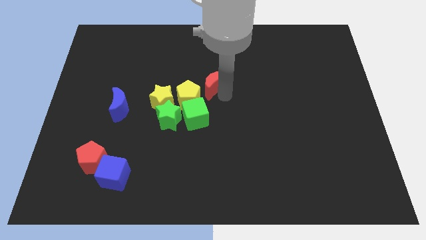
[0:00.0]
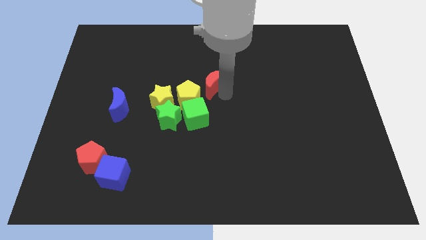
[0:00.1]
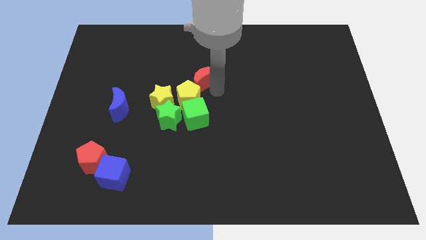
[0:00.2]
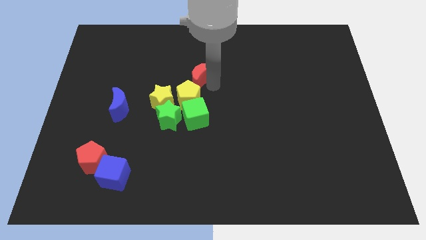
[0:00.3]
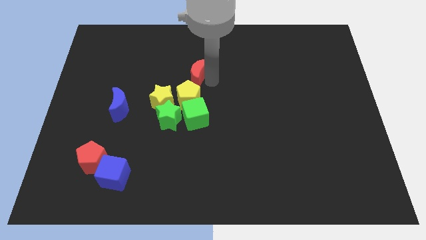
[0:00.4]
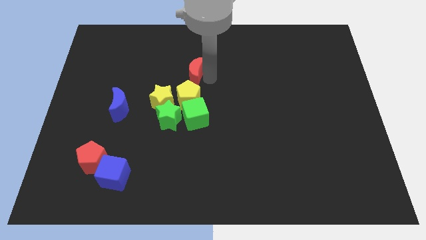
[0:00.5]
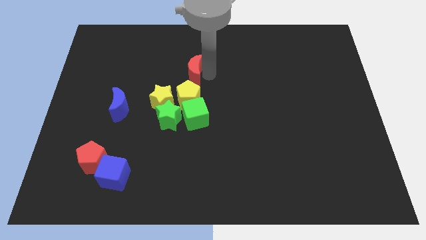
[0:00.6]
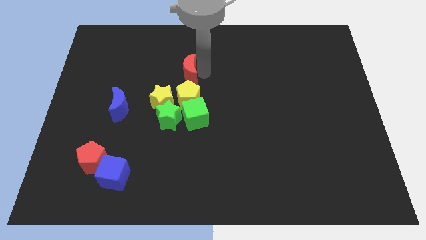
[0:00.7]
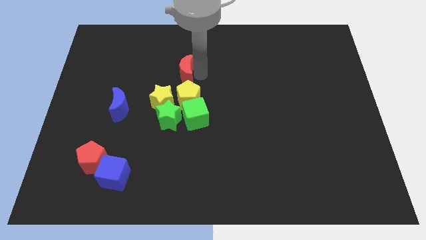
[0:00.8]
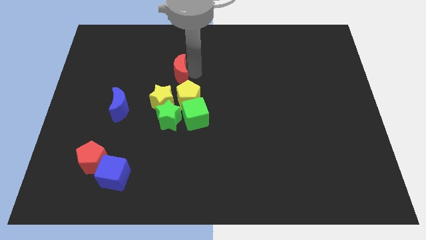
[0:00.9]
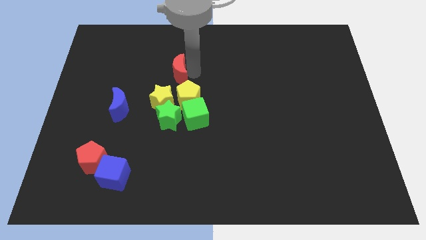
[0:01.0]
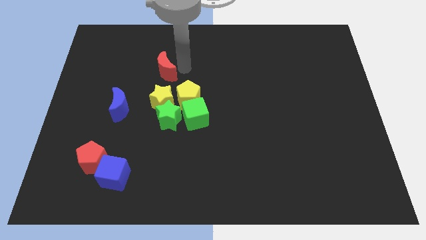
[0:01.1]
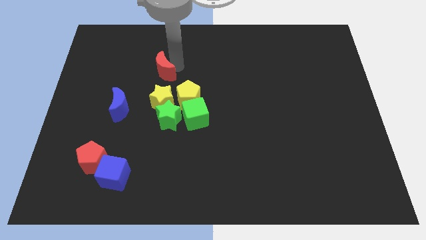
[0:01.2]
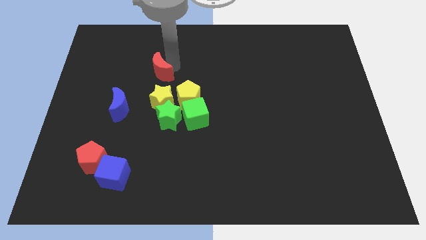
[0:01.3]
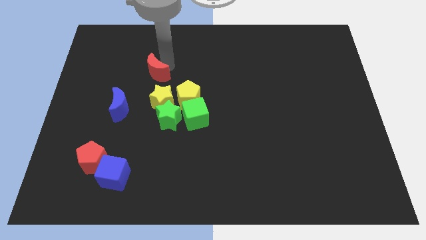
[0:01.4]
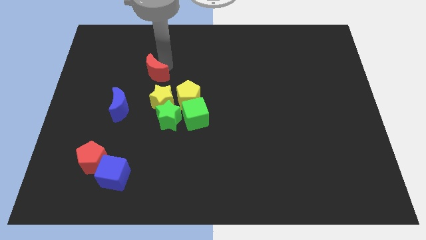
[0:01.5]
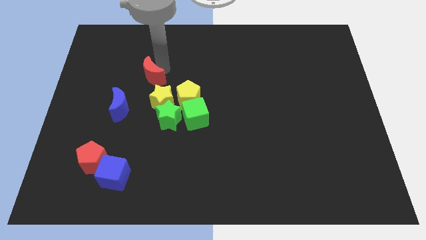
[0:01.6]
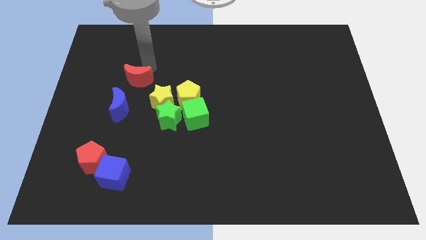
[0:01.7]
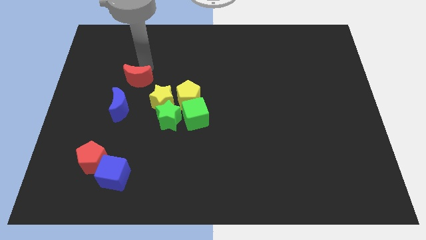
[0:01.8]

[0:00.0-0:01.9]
move the red crescent to the top left

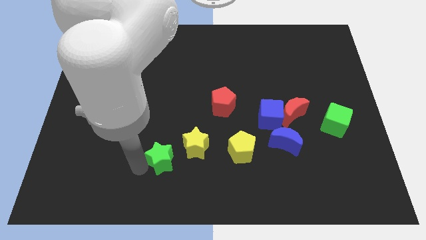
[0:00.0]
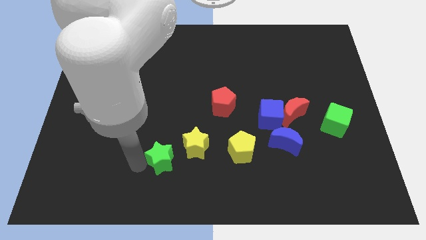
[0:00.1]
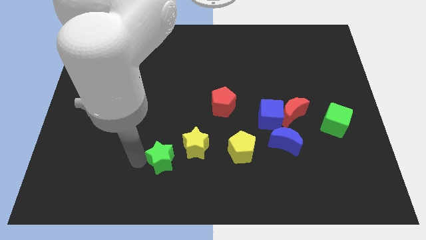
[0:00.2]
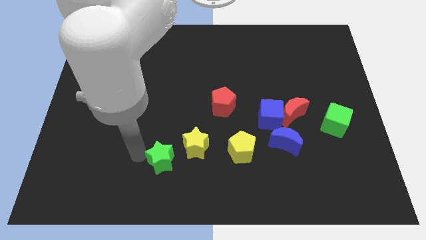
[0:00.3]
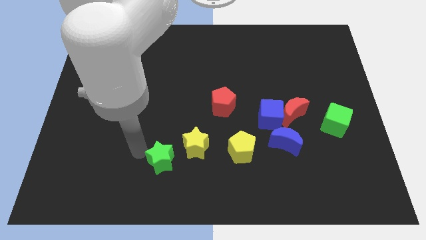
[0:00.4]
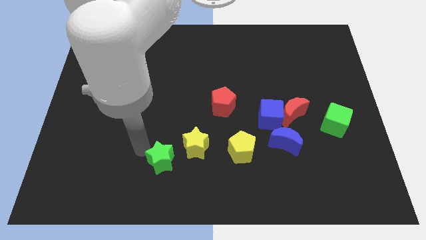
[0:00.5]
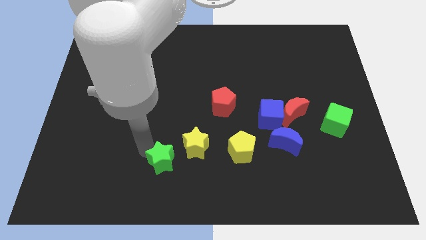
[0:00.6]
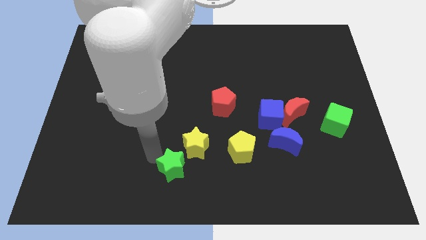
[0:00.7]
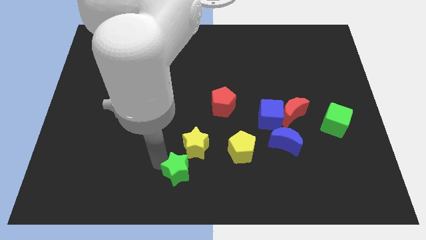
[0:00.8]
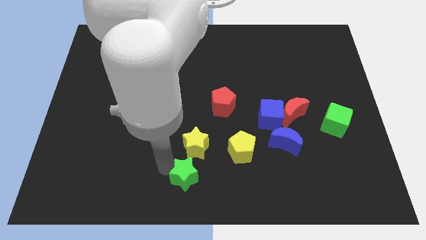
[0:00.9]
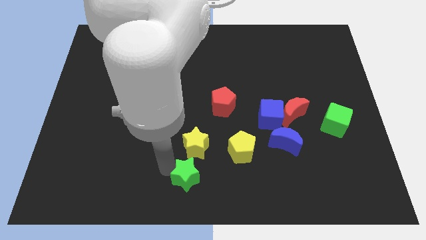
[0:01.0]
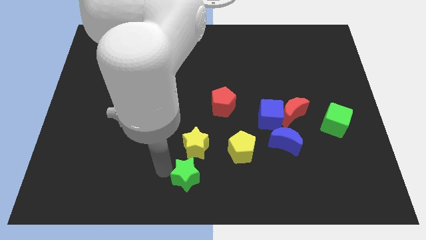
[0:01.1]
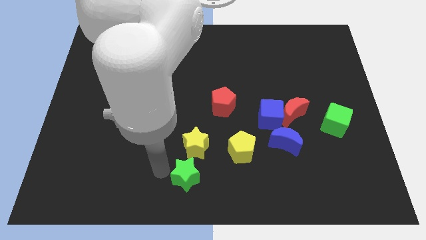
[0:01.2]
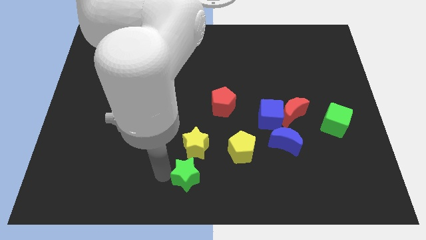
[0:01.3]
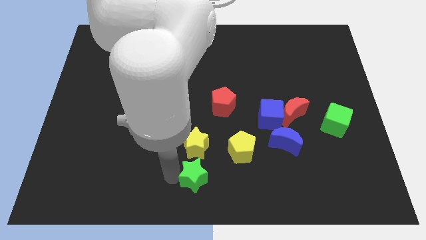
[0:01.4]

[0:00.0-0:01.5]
move the green star to the bottom of the yellow star

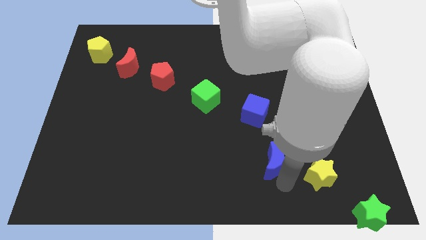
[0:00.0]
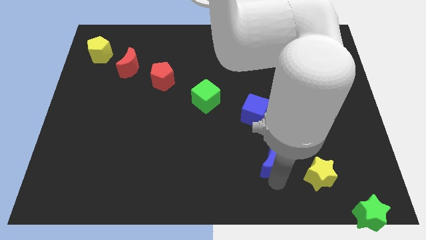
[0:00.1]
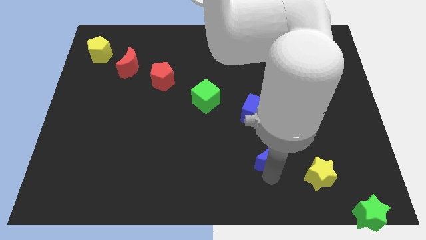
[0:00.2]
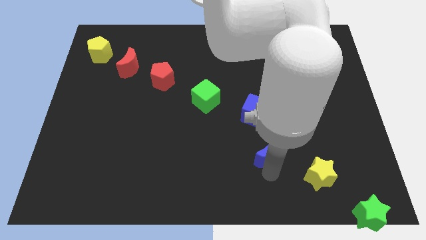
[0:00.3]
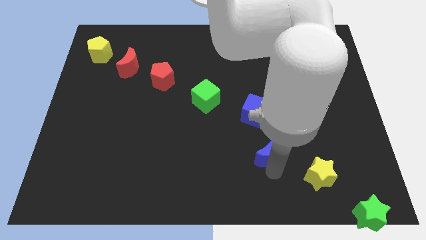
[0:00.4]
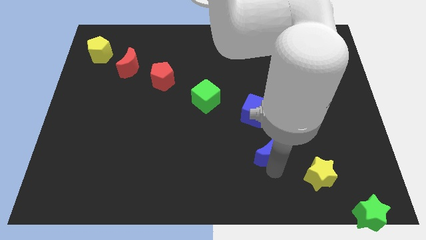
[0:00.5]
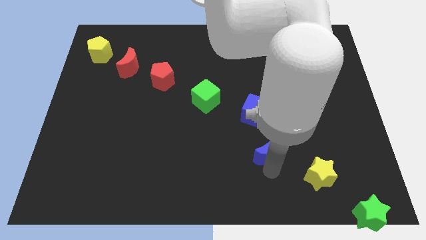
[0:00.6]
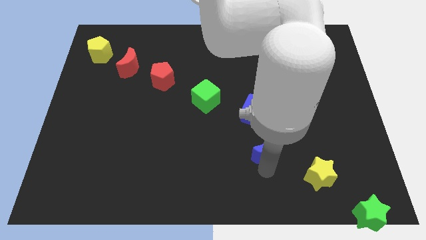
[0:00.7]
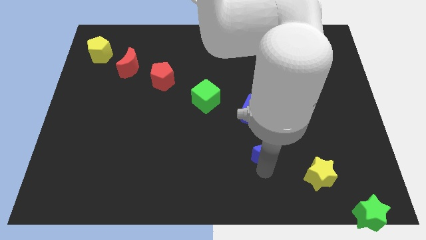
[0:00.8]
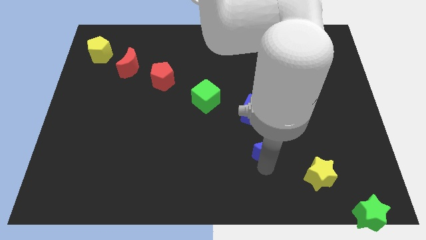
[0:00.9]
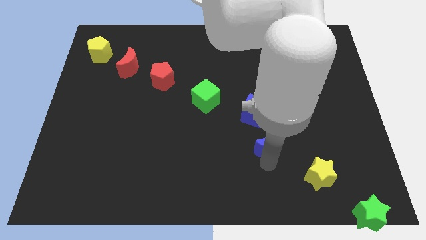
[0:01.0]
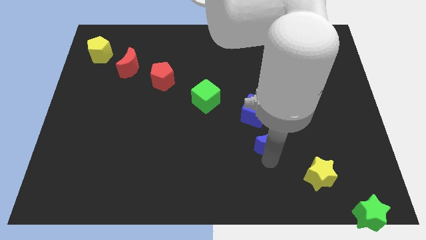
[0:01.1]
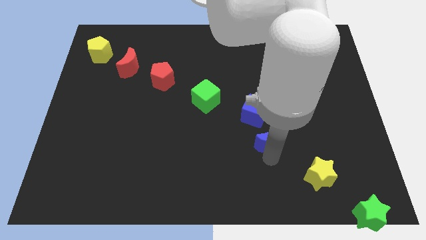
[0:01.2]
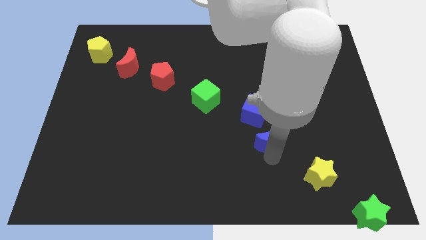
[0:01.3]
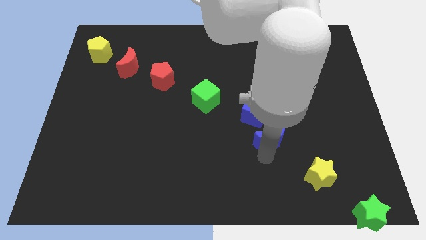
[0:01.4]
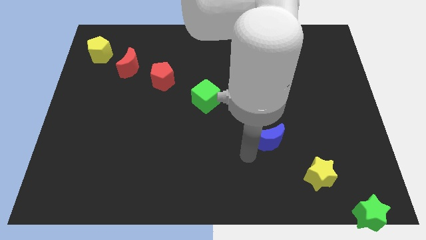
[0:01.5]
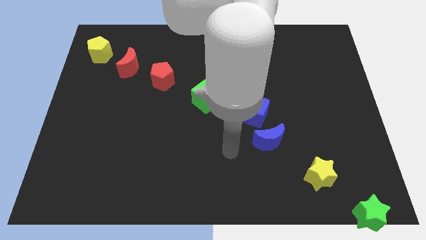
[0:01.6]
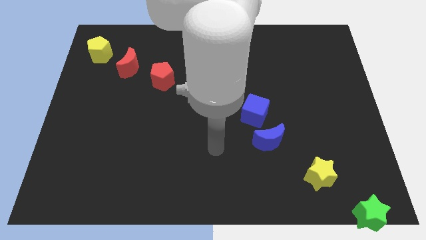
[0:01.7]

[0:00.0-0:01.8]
place blue moon to the bottom of blue cube

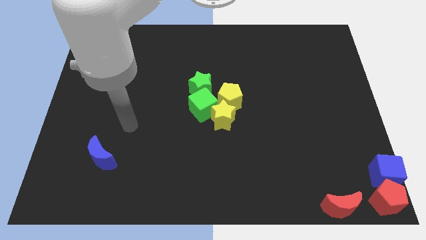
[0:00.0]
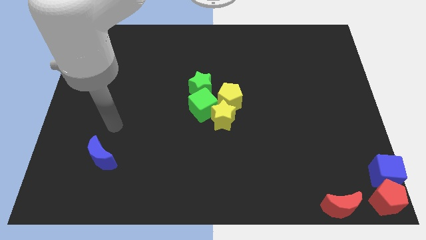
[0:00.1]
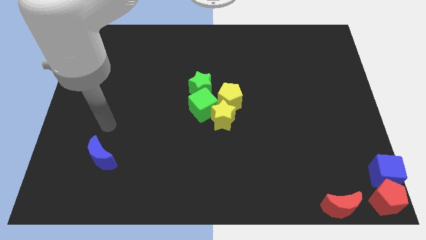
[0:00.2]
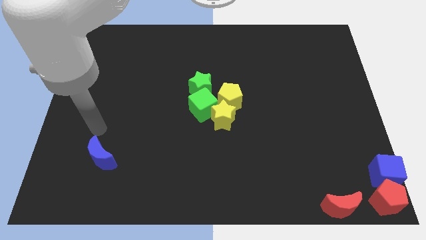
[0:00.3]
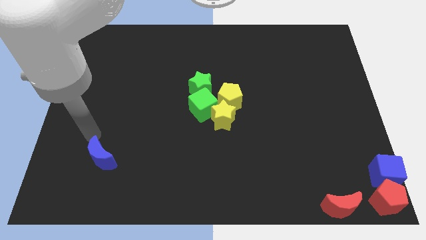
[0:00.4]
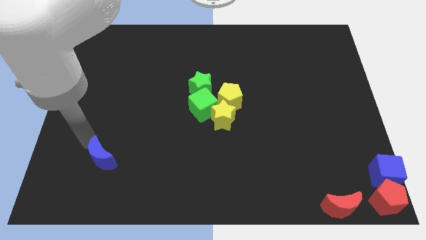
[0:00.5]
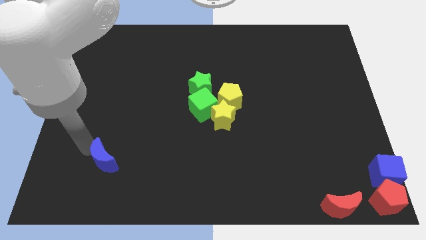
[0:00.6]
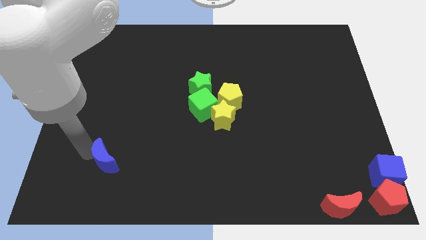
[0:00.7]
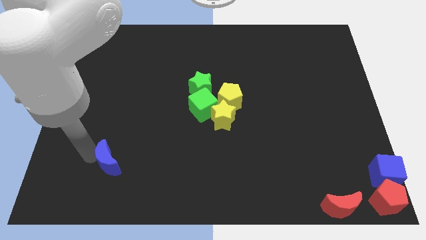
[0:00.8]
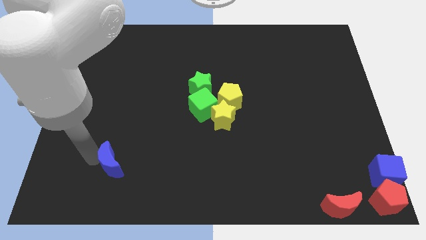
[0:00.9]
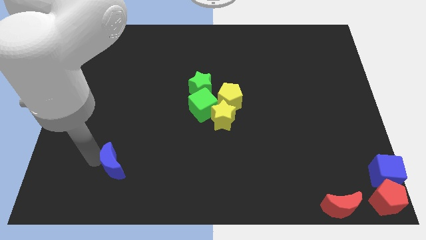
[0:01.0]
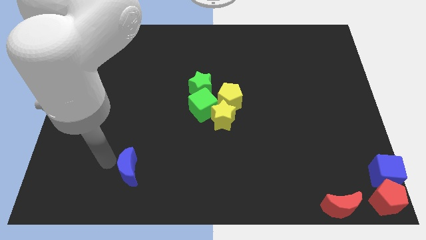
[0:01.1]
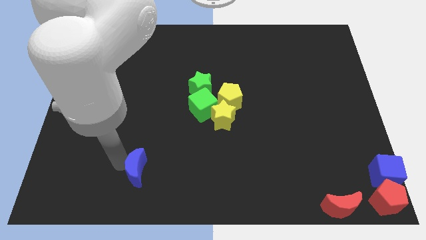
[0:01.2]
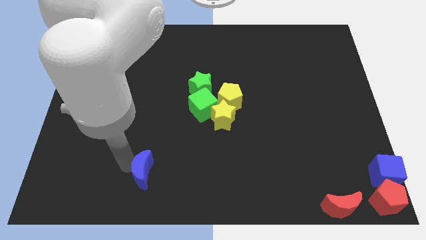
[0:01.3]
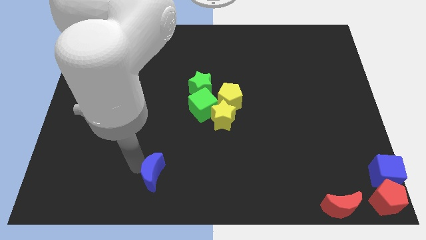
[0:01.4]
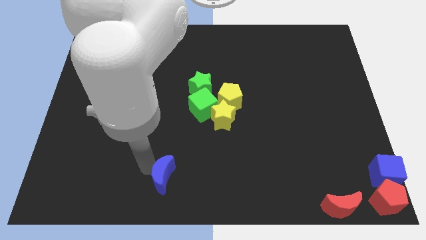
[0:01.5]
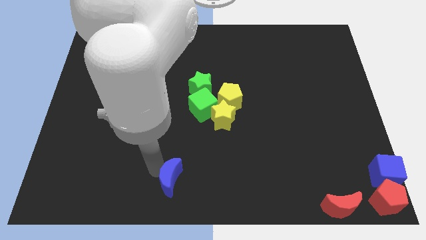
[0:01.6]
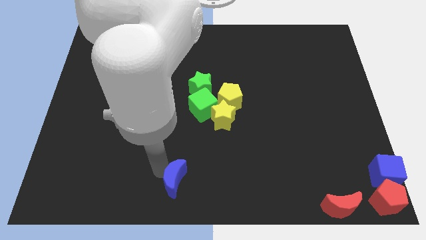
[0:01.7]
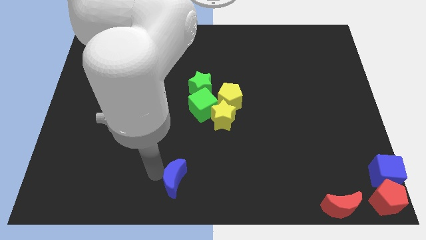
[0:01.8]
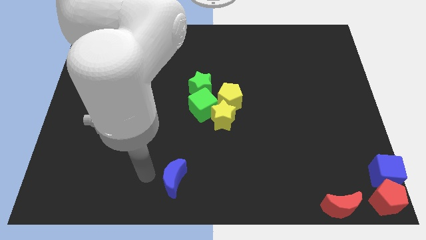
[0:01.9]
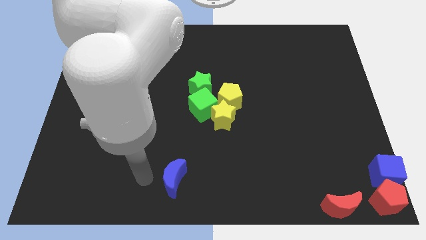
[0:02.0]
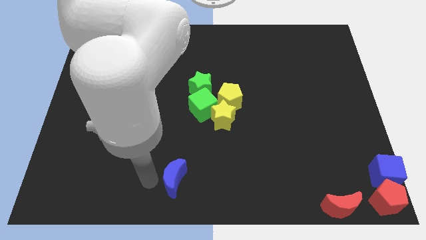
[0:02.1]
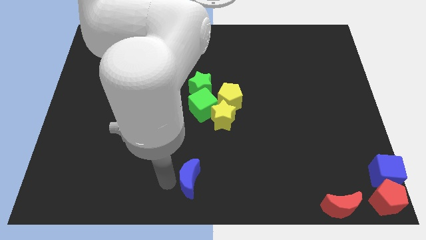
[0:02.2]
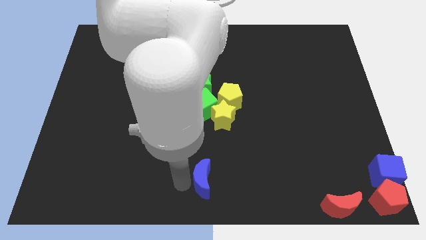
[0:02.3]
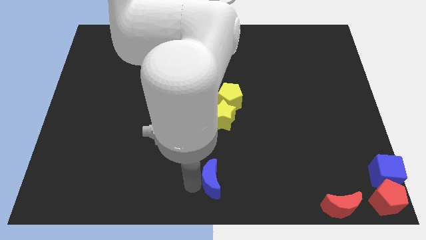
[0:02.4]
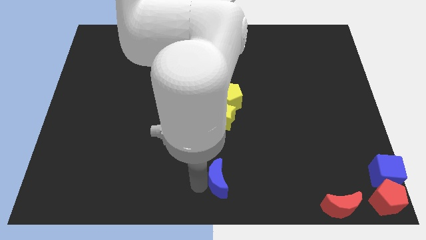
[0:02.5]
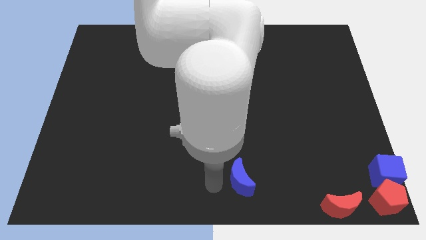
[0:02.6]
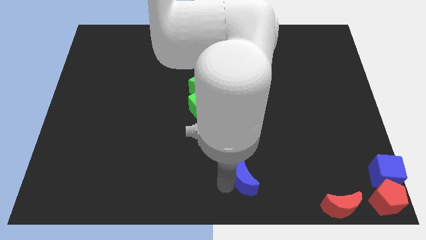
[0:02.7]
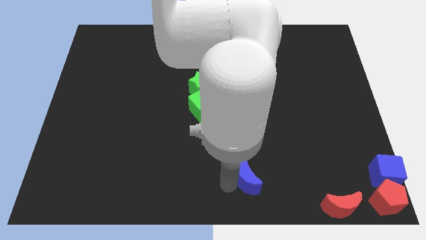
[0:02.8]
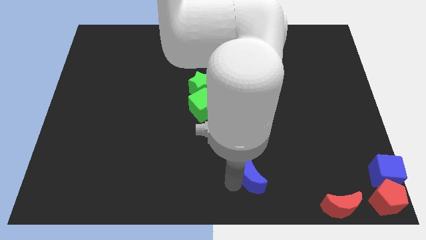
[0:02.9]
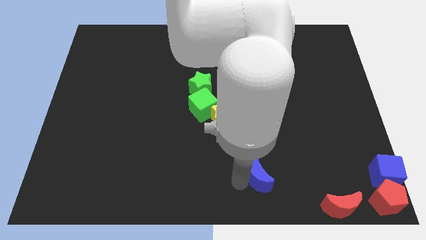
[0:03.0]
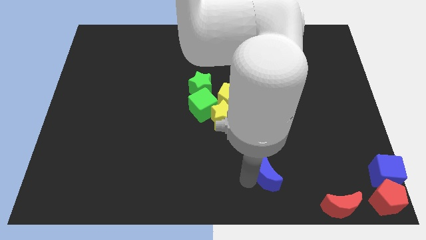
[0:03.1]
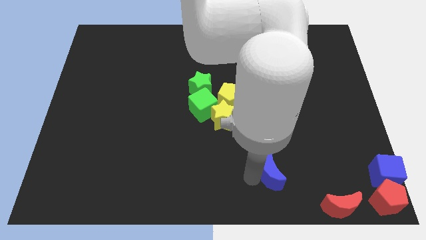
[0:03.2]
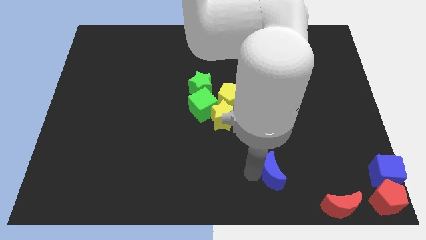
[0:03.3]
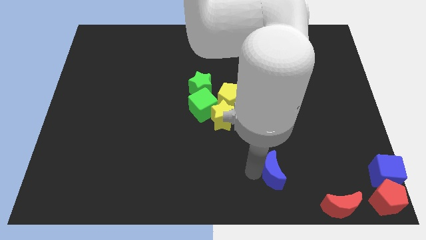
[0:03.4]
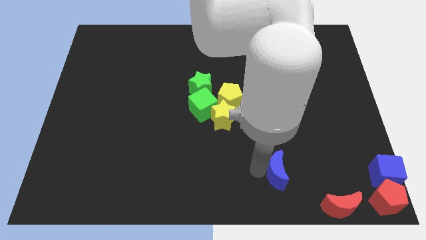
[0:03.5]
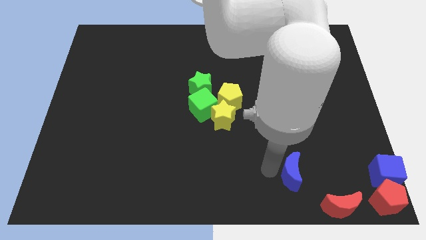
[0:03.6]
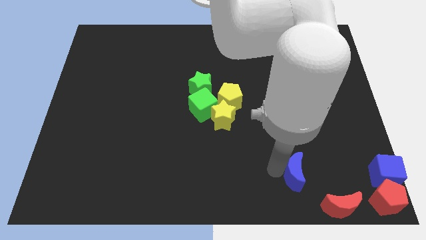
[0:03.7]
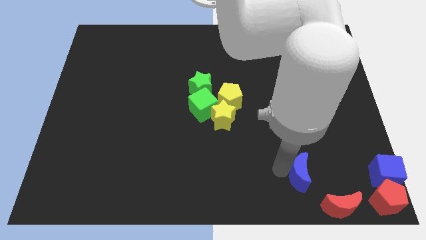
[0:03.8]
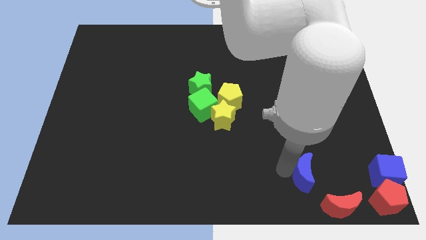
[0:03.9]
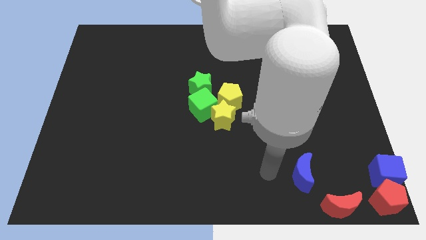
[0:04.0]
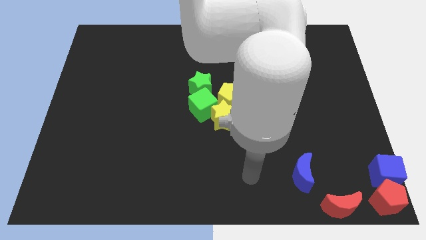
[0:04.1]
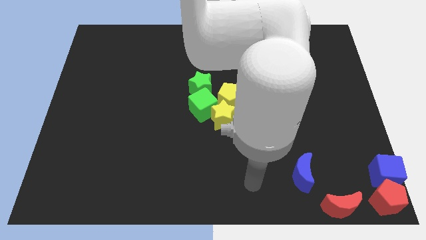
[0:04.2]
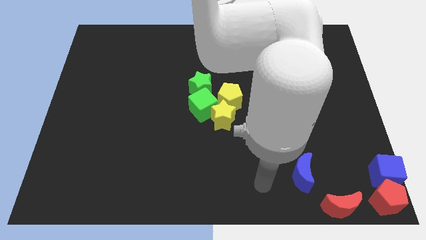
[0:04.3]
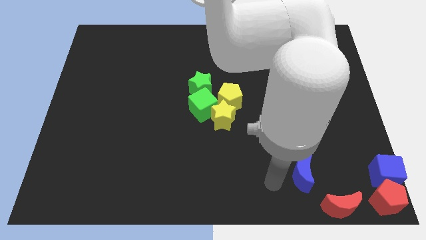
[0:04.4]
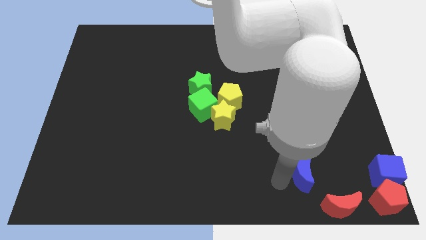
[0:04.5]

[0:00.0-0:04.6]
push the blue crescent towards the blue cube
